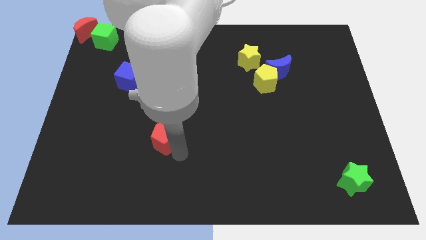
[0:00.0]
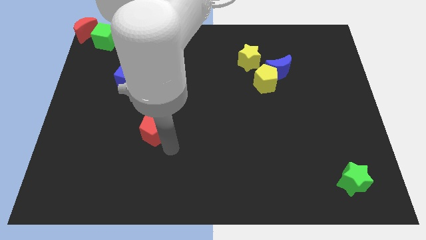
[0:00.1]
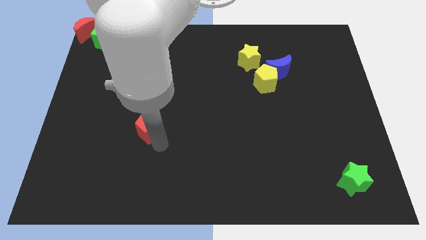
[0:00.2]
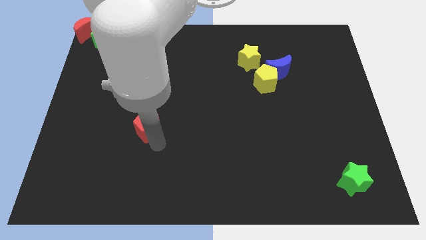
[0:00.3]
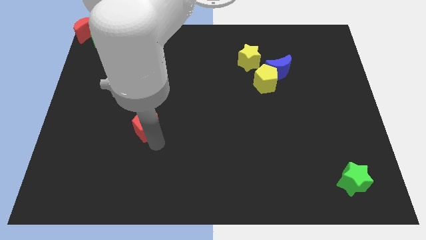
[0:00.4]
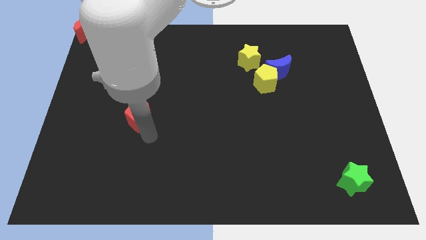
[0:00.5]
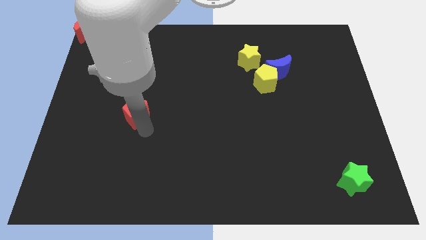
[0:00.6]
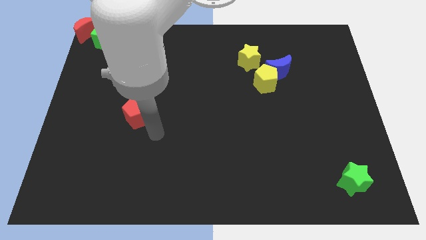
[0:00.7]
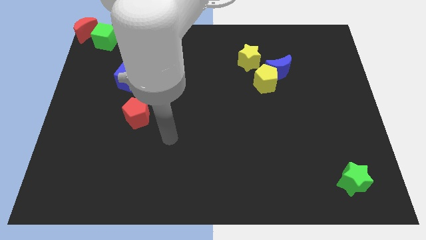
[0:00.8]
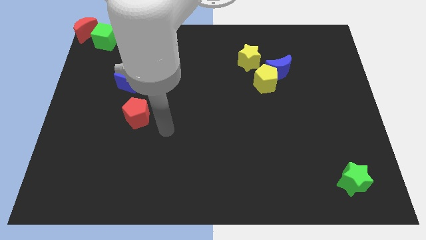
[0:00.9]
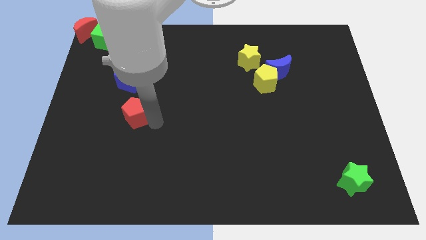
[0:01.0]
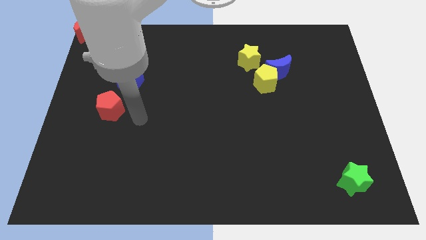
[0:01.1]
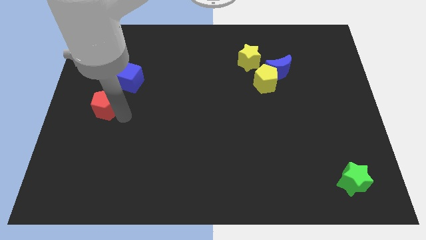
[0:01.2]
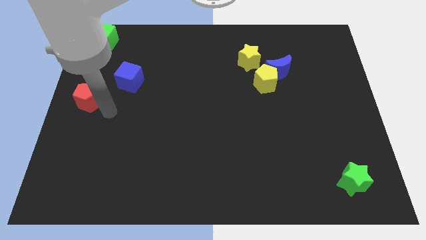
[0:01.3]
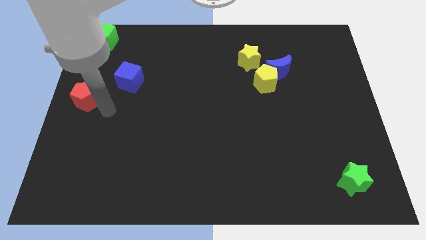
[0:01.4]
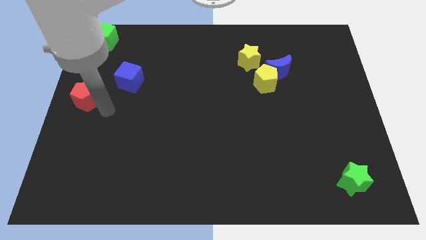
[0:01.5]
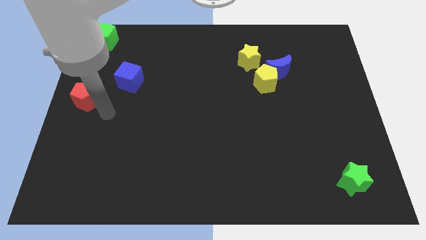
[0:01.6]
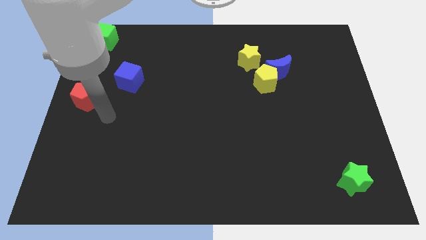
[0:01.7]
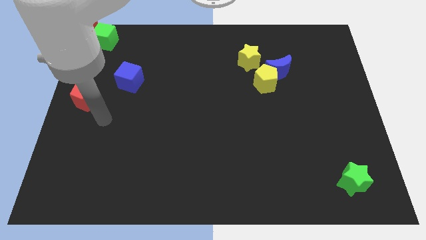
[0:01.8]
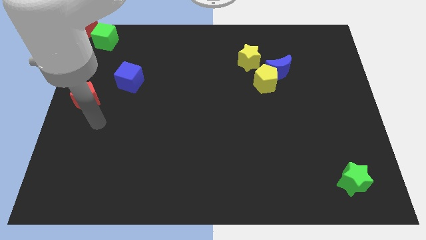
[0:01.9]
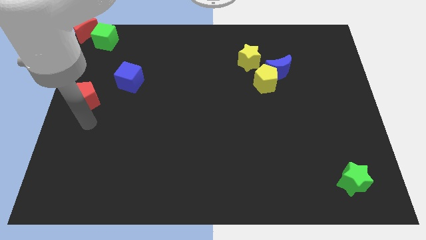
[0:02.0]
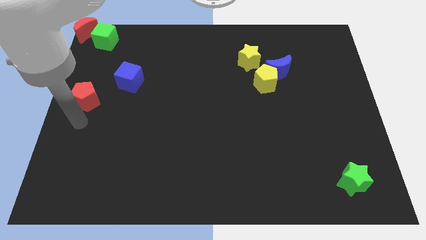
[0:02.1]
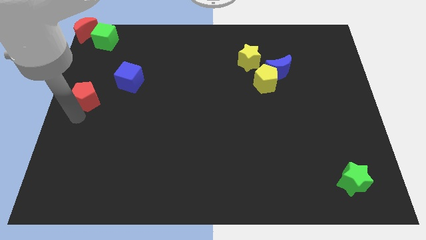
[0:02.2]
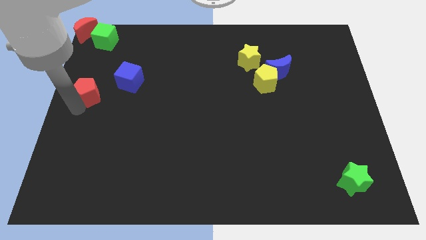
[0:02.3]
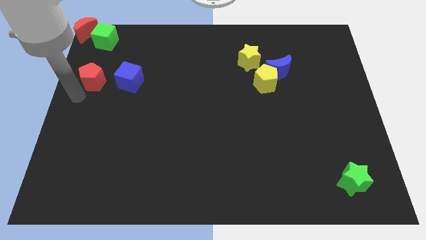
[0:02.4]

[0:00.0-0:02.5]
push the red pentagon parallel to the blue cube

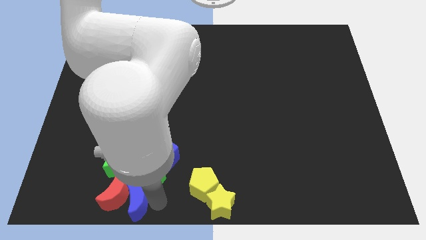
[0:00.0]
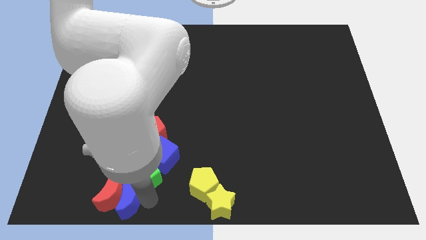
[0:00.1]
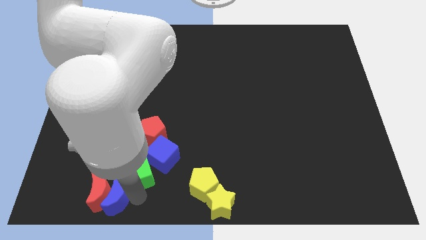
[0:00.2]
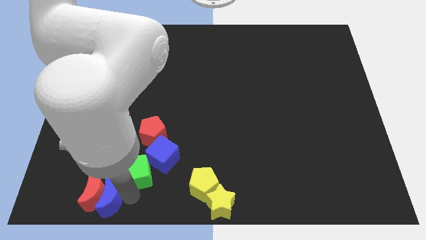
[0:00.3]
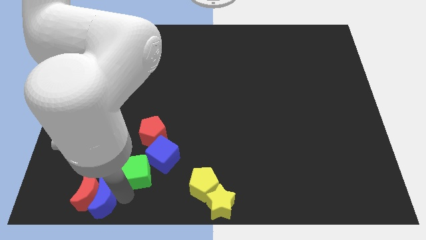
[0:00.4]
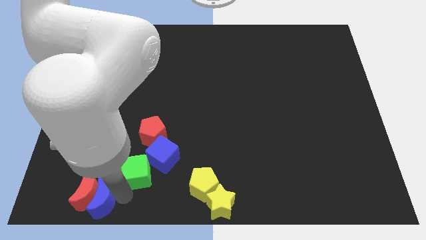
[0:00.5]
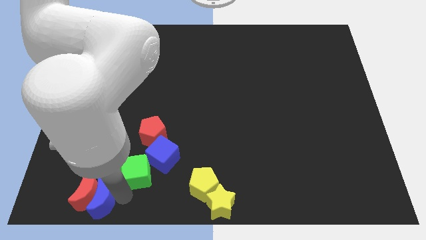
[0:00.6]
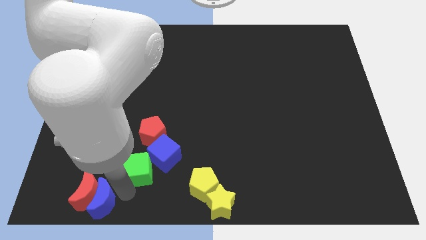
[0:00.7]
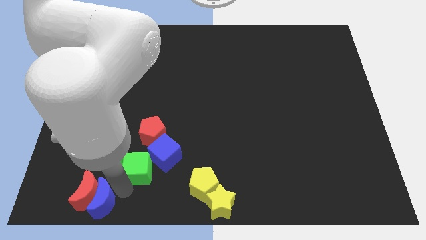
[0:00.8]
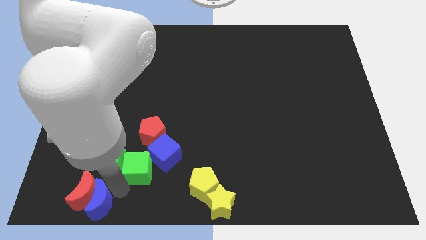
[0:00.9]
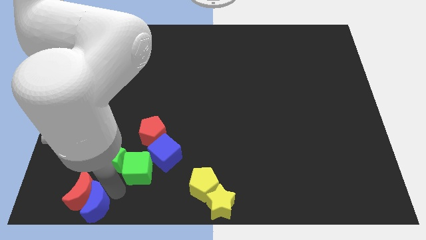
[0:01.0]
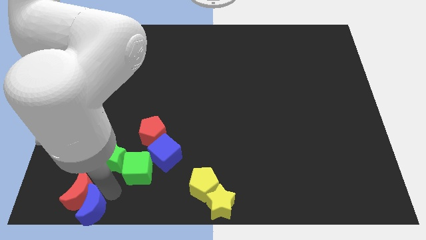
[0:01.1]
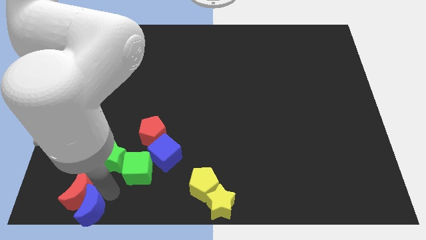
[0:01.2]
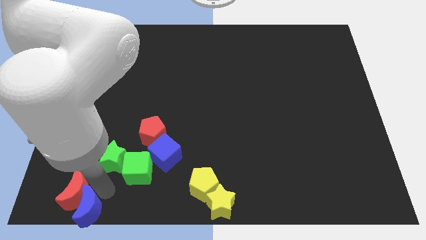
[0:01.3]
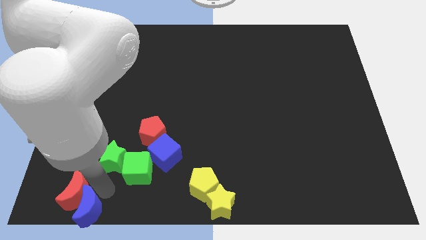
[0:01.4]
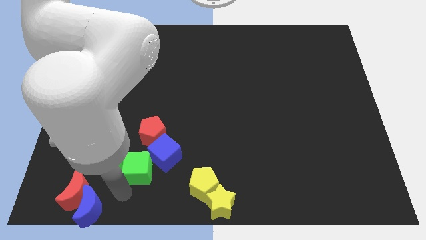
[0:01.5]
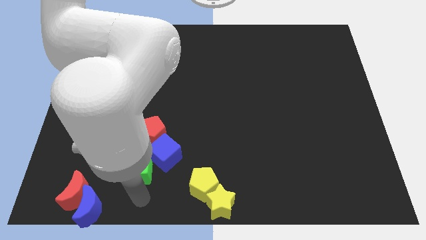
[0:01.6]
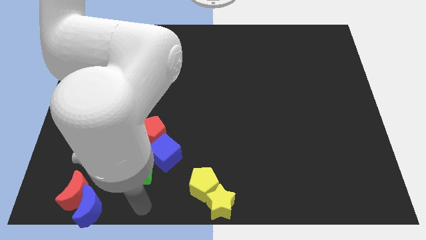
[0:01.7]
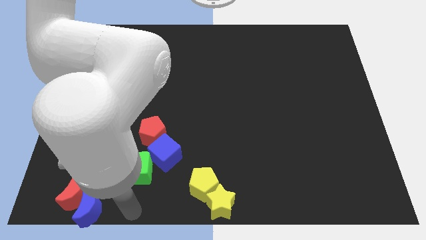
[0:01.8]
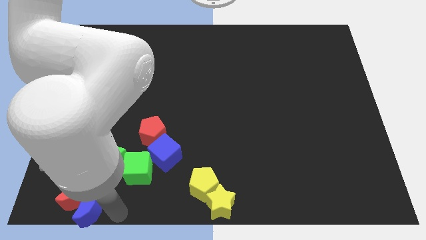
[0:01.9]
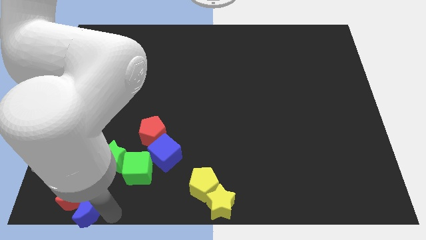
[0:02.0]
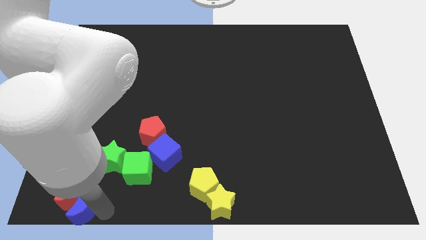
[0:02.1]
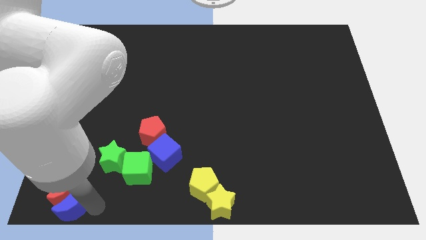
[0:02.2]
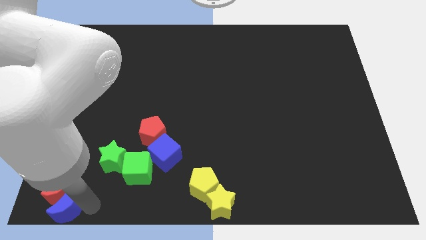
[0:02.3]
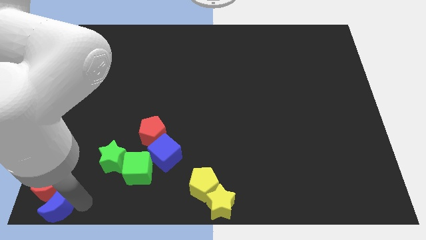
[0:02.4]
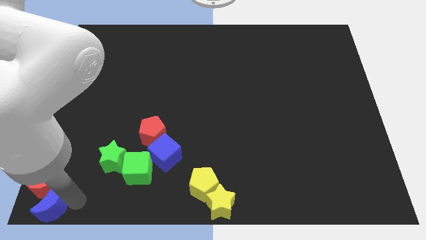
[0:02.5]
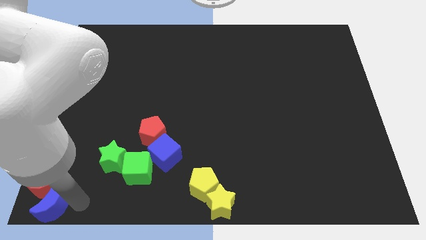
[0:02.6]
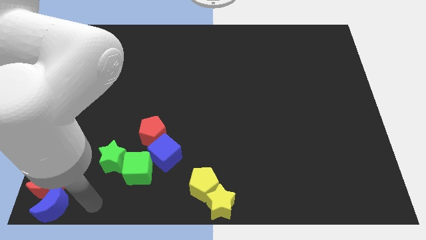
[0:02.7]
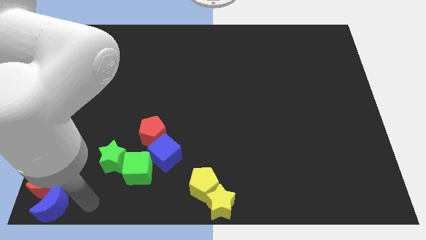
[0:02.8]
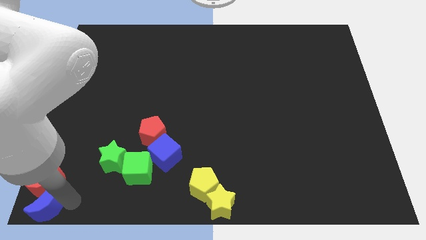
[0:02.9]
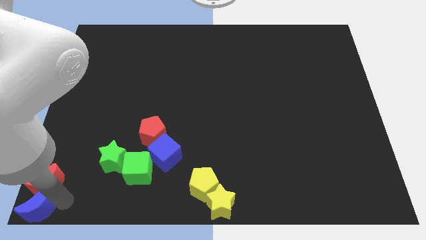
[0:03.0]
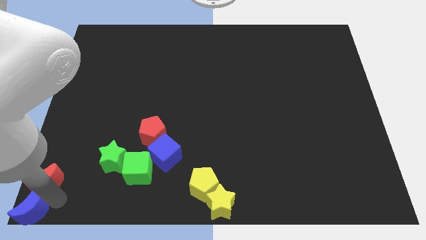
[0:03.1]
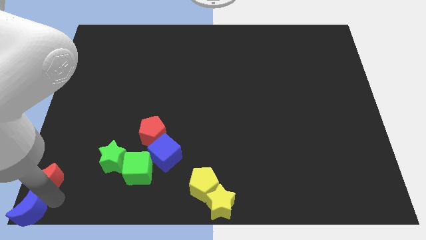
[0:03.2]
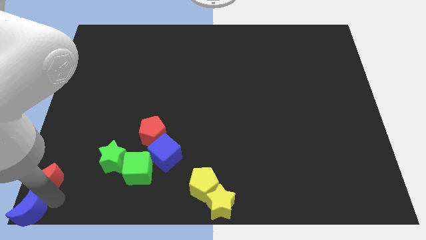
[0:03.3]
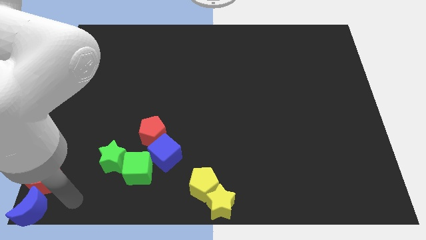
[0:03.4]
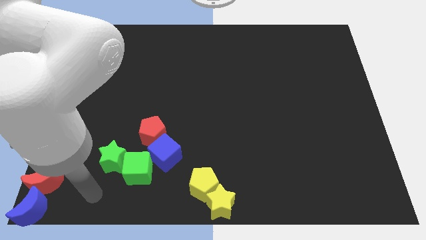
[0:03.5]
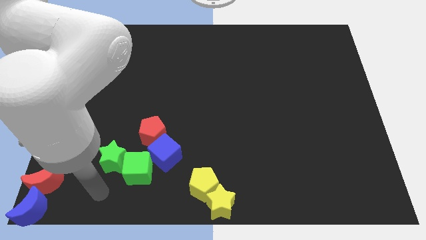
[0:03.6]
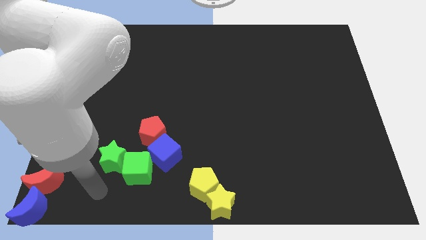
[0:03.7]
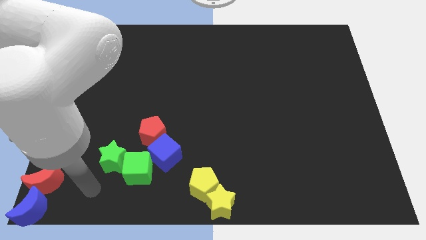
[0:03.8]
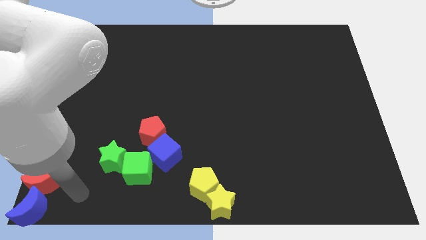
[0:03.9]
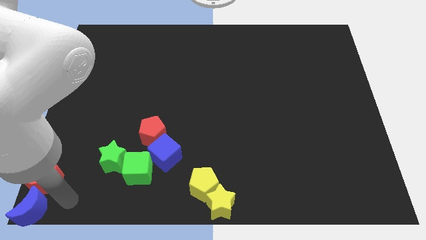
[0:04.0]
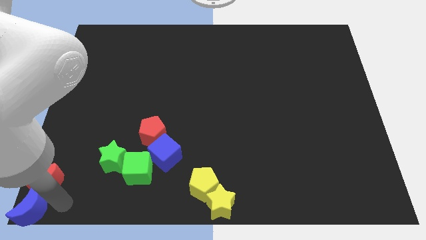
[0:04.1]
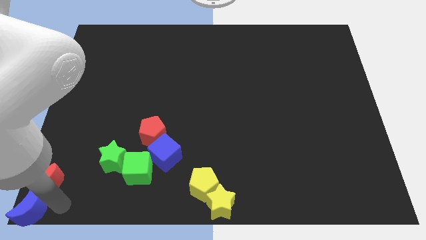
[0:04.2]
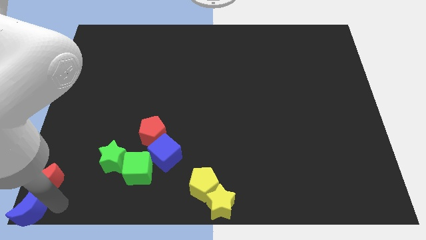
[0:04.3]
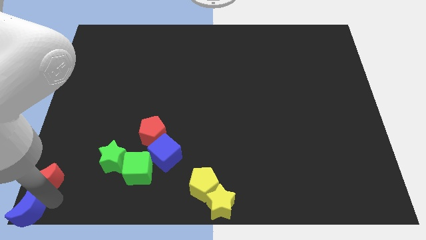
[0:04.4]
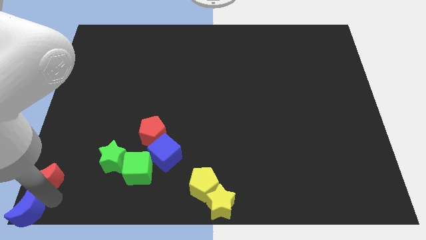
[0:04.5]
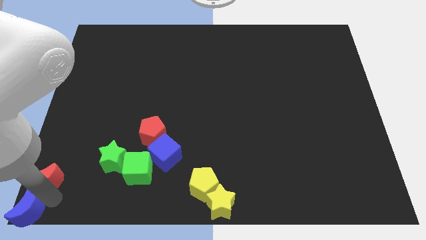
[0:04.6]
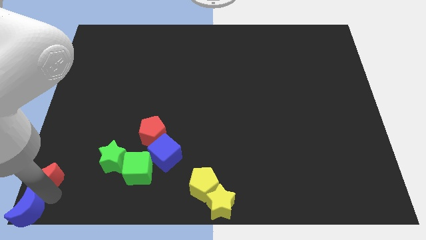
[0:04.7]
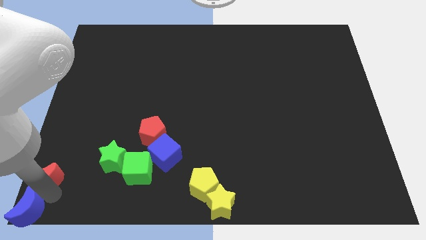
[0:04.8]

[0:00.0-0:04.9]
move the blue crescent to the bottom left of the board

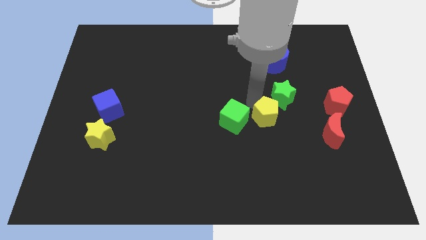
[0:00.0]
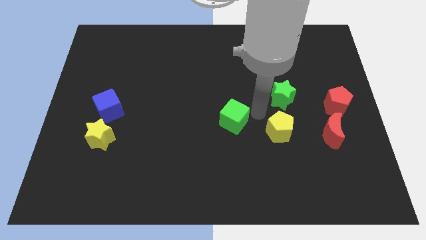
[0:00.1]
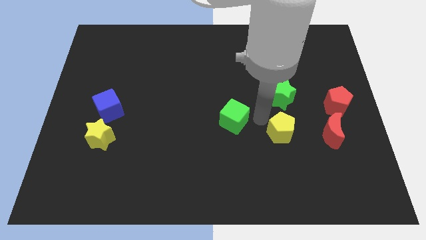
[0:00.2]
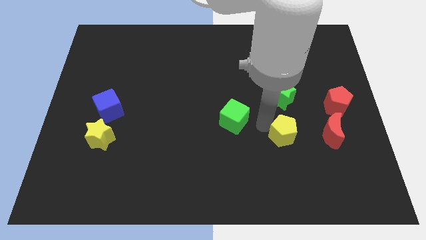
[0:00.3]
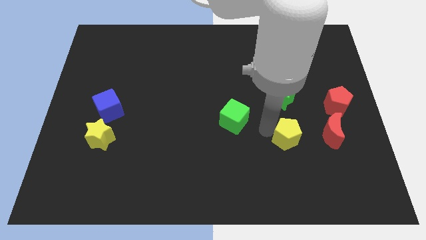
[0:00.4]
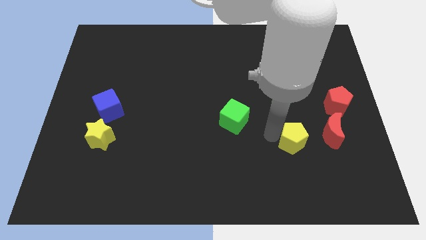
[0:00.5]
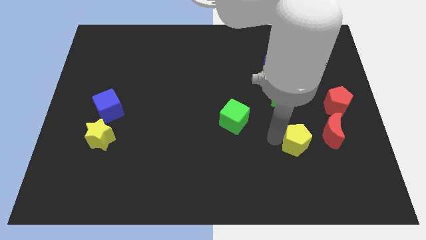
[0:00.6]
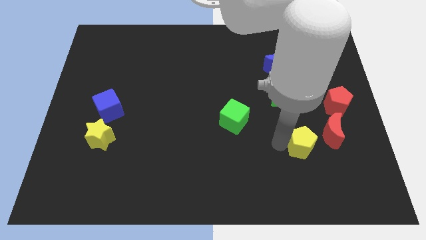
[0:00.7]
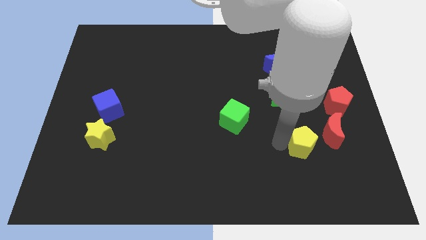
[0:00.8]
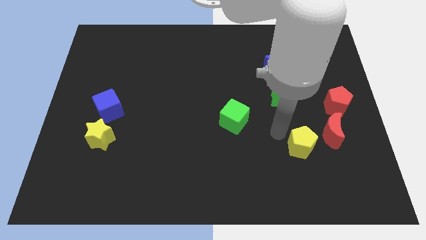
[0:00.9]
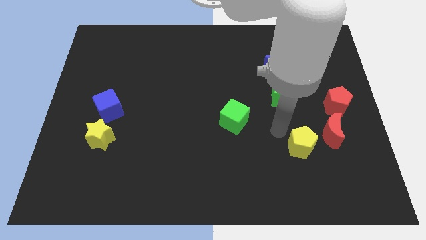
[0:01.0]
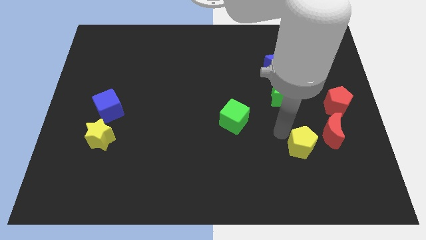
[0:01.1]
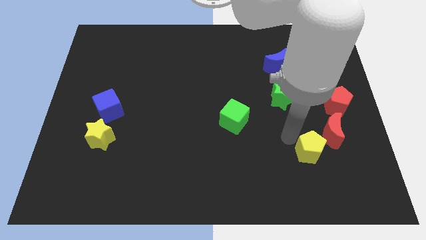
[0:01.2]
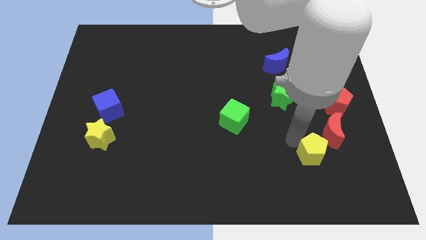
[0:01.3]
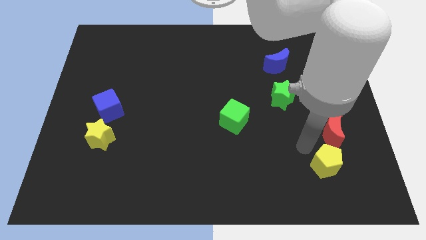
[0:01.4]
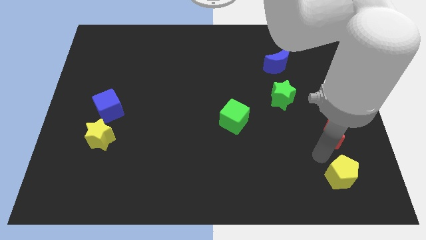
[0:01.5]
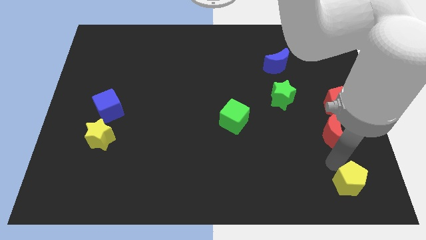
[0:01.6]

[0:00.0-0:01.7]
move the yellow pentagon to the bottom of the red crescent
